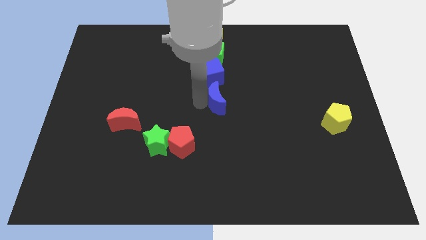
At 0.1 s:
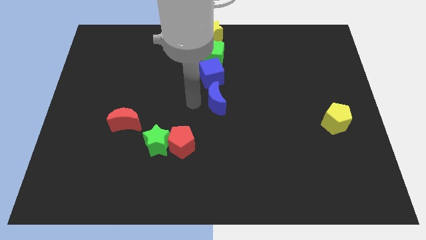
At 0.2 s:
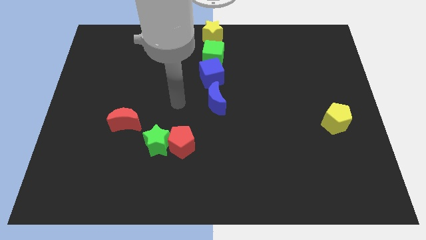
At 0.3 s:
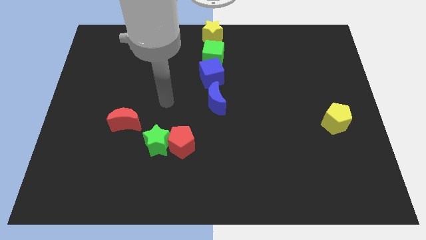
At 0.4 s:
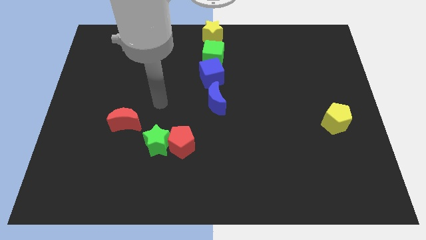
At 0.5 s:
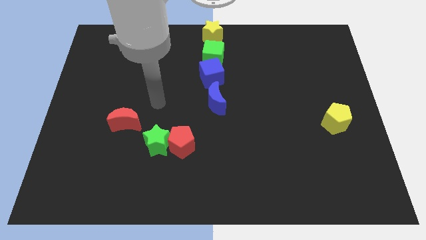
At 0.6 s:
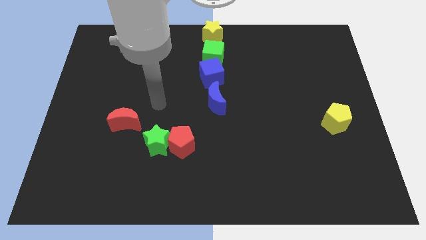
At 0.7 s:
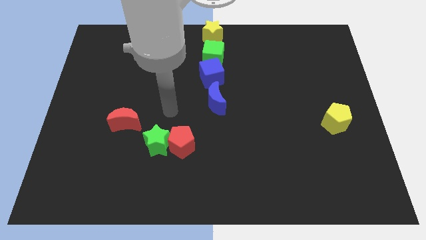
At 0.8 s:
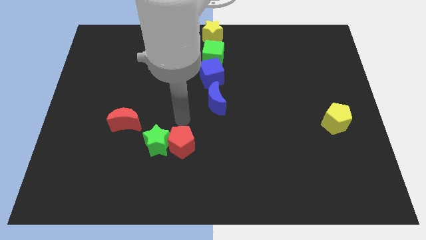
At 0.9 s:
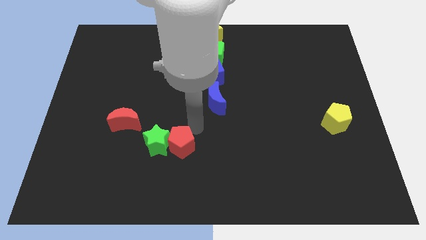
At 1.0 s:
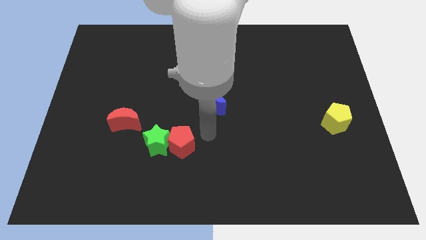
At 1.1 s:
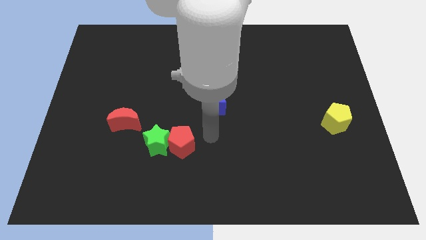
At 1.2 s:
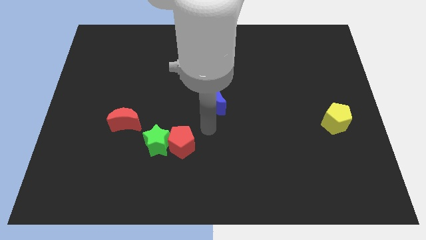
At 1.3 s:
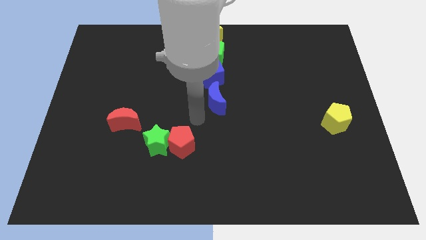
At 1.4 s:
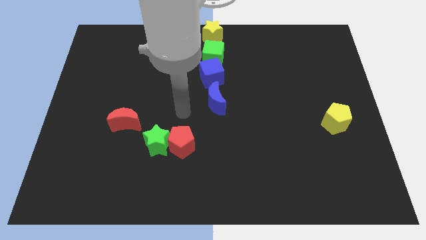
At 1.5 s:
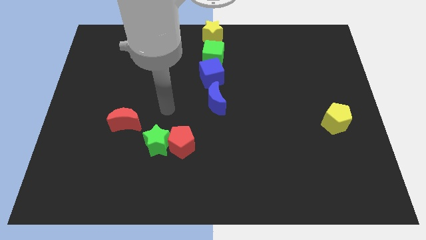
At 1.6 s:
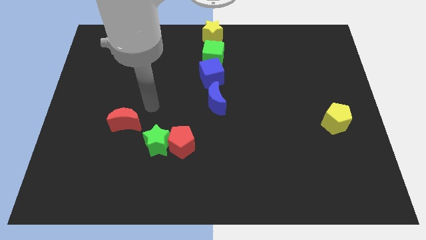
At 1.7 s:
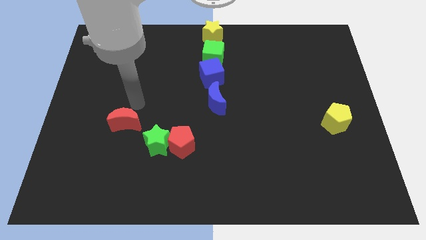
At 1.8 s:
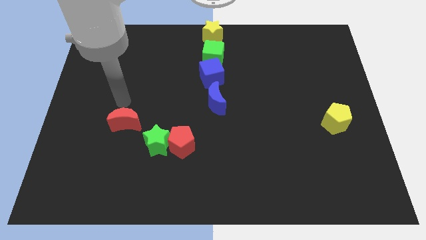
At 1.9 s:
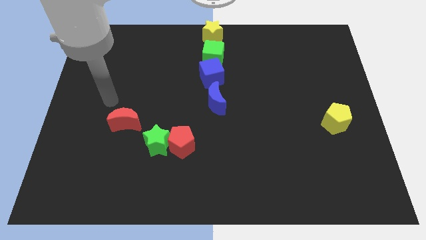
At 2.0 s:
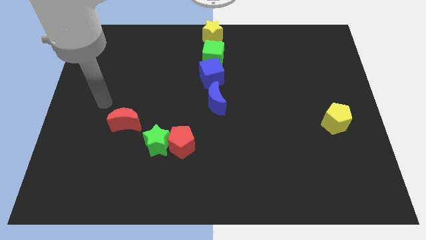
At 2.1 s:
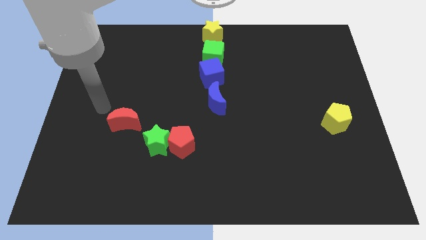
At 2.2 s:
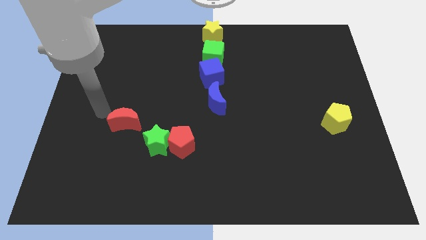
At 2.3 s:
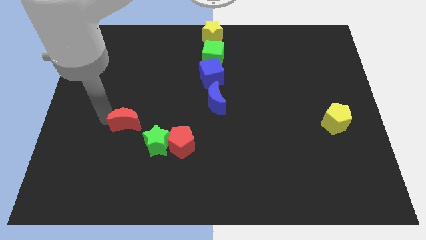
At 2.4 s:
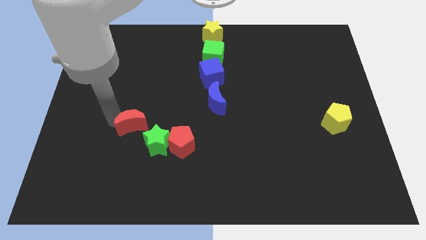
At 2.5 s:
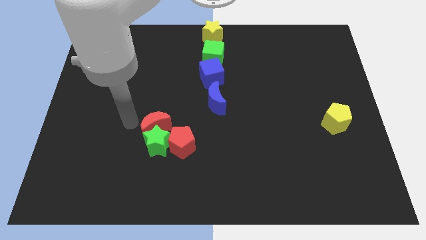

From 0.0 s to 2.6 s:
point your arm top of red moon

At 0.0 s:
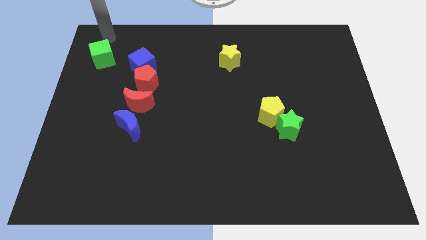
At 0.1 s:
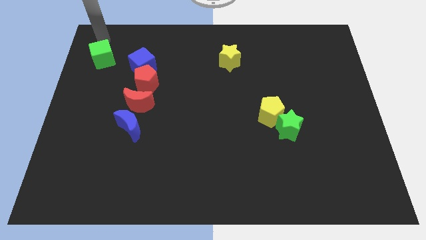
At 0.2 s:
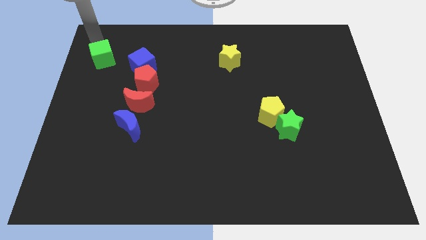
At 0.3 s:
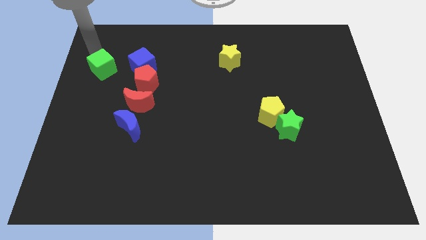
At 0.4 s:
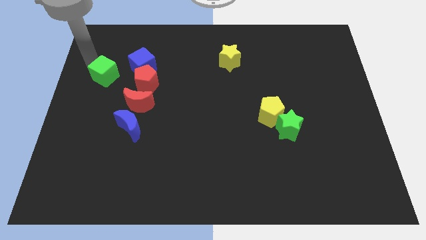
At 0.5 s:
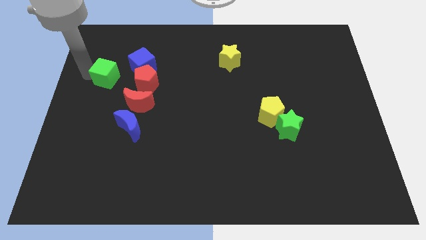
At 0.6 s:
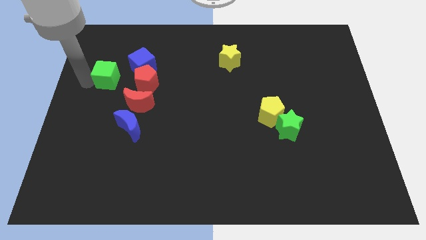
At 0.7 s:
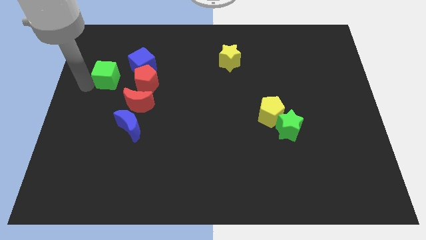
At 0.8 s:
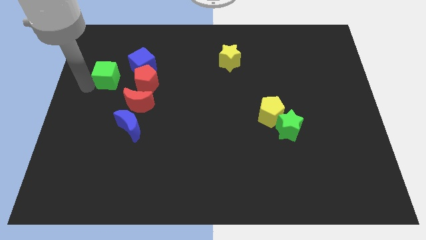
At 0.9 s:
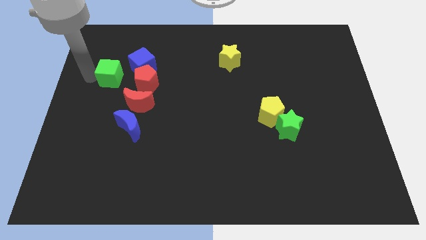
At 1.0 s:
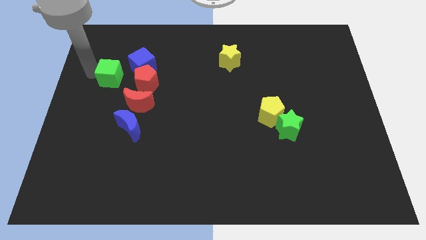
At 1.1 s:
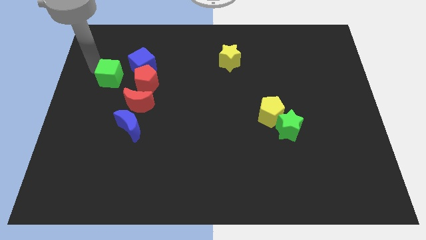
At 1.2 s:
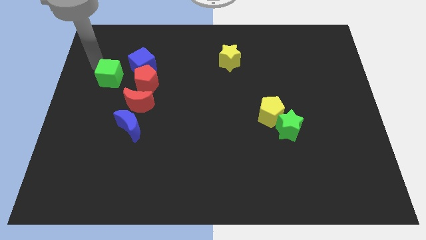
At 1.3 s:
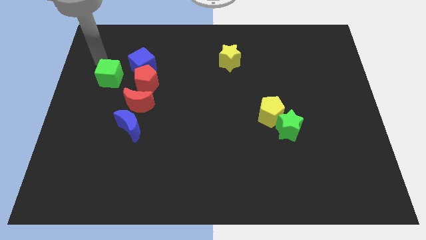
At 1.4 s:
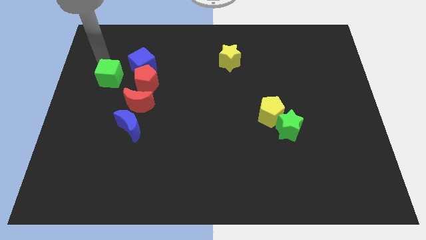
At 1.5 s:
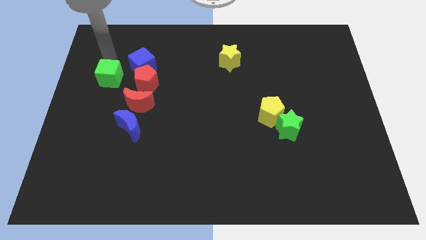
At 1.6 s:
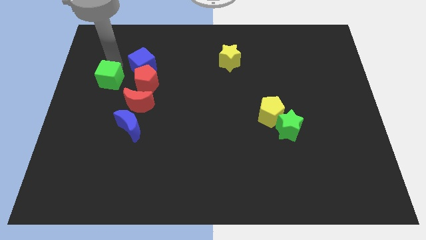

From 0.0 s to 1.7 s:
push the green cube towards red pentagon

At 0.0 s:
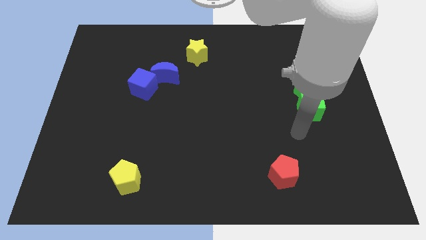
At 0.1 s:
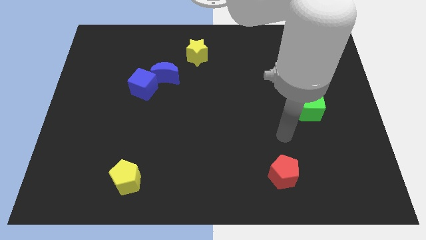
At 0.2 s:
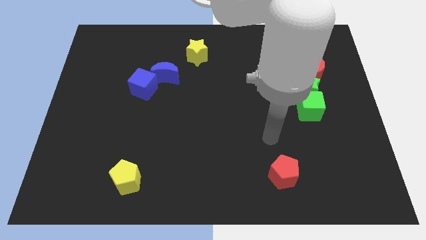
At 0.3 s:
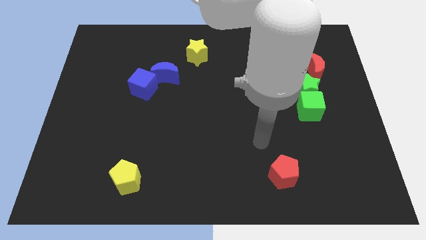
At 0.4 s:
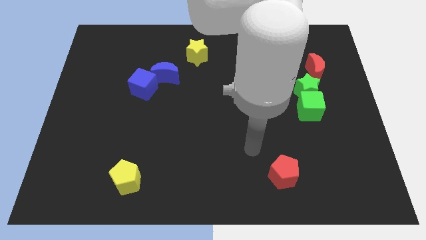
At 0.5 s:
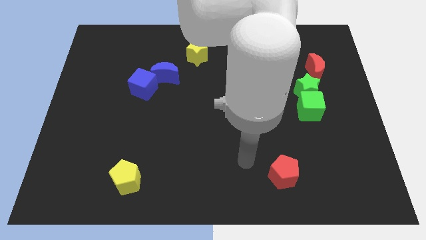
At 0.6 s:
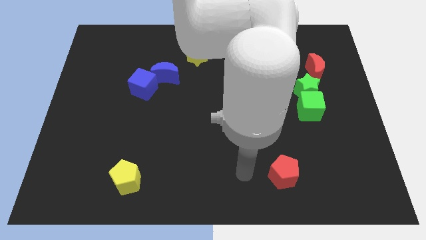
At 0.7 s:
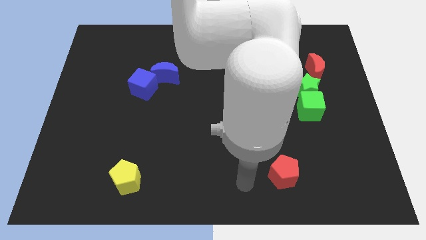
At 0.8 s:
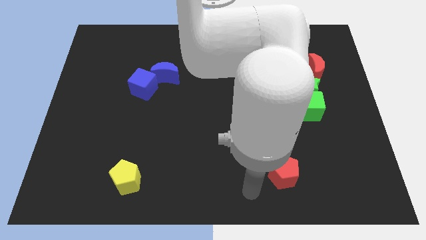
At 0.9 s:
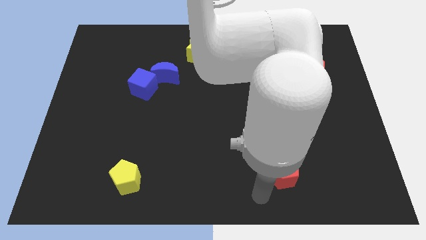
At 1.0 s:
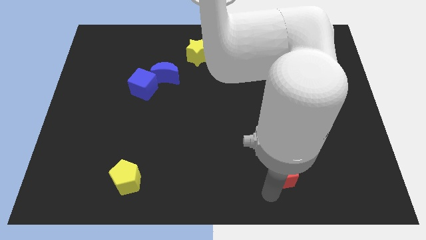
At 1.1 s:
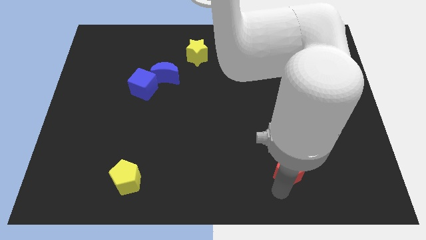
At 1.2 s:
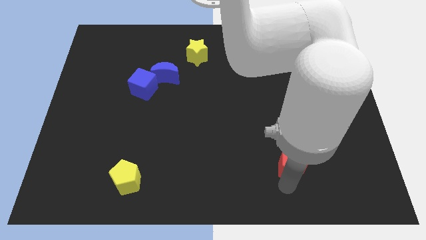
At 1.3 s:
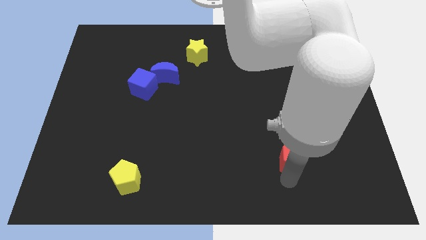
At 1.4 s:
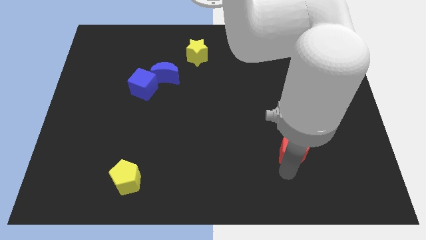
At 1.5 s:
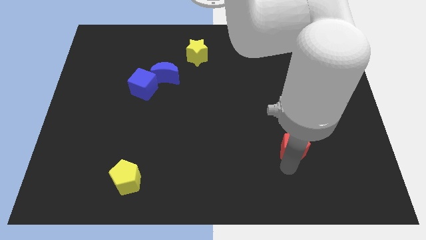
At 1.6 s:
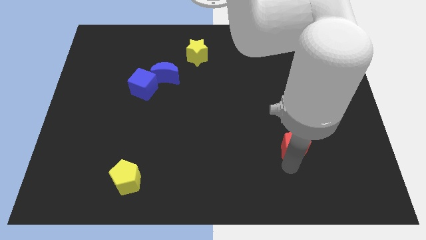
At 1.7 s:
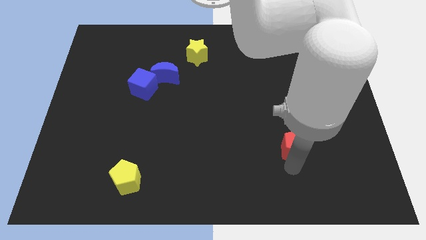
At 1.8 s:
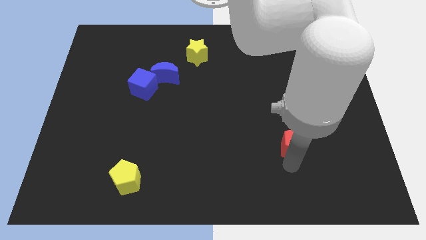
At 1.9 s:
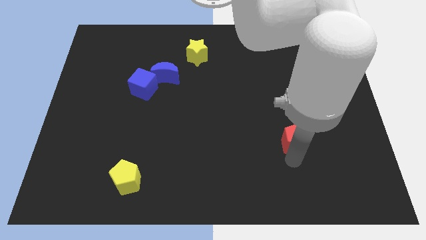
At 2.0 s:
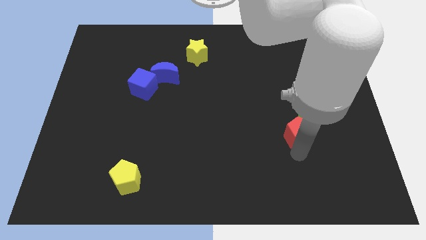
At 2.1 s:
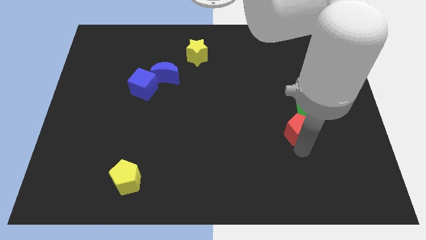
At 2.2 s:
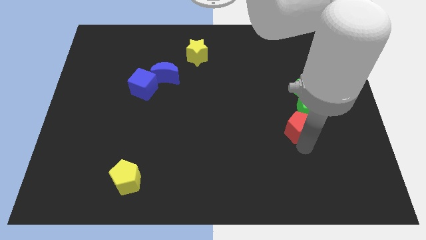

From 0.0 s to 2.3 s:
move the red pentagon diagonal to green cube

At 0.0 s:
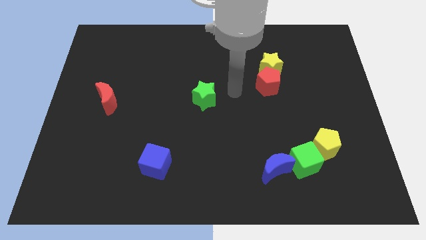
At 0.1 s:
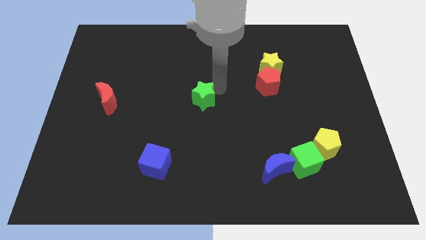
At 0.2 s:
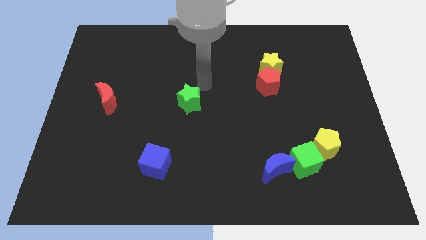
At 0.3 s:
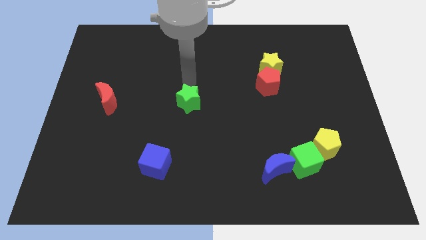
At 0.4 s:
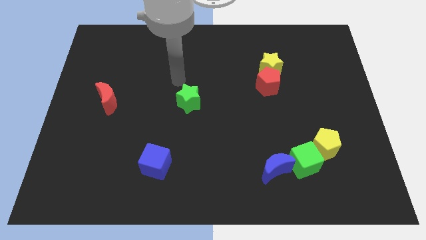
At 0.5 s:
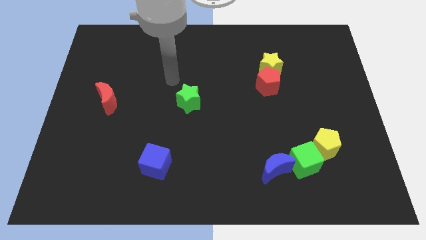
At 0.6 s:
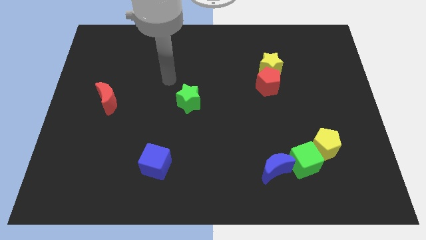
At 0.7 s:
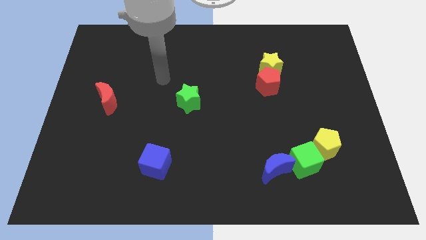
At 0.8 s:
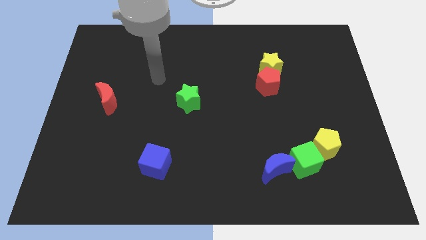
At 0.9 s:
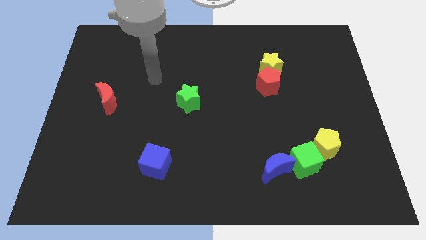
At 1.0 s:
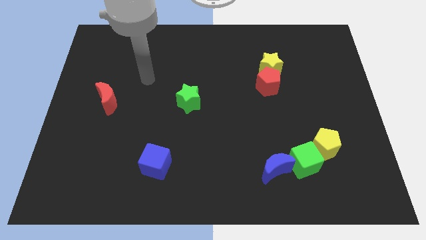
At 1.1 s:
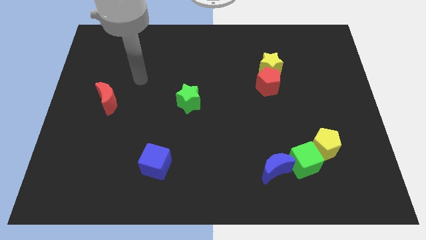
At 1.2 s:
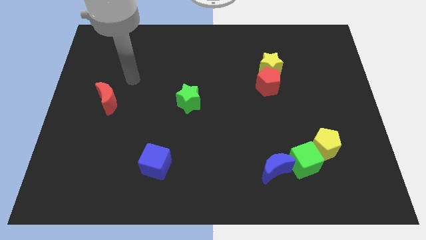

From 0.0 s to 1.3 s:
slightly push the green star to the center of the board

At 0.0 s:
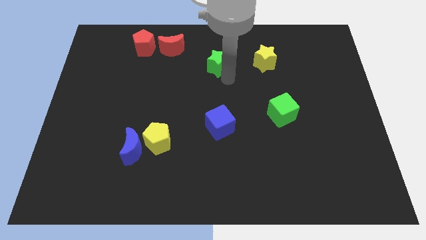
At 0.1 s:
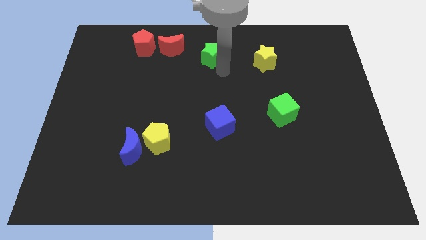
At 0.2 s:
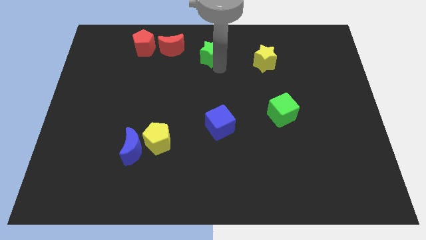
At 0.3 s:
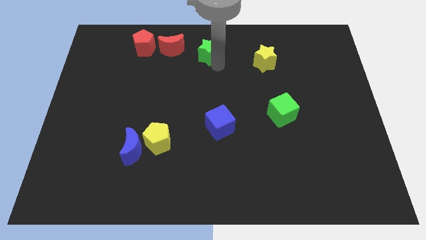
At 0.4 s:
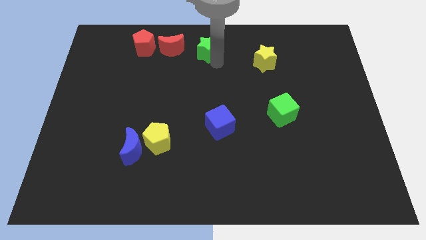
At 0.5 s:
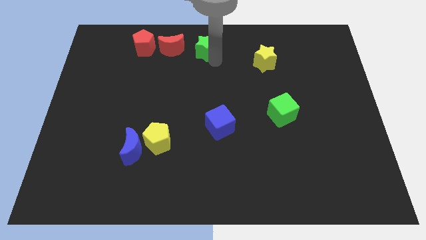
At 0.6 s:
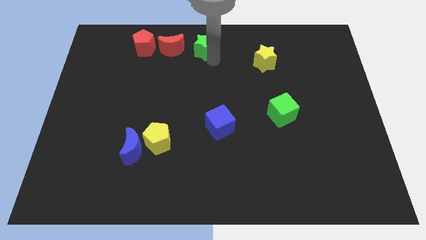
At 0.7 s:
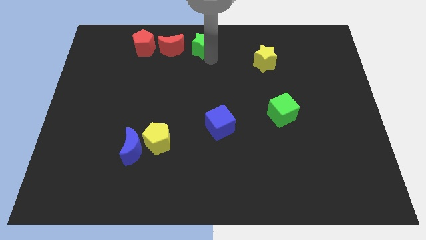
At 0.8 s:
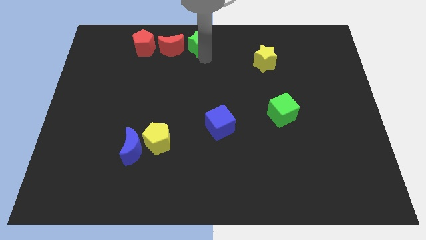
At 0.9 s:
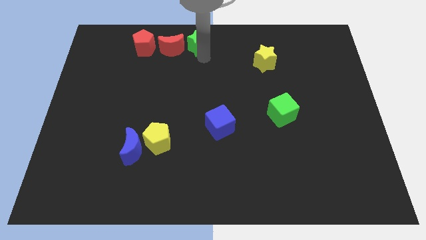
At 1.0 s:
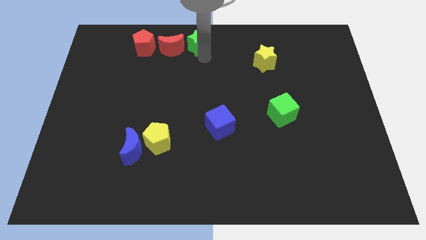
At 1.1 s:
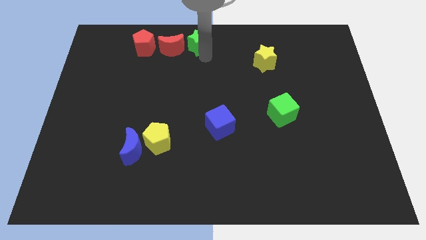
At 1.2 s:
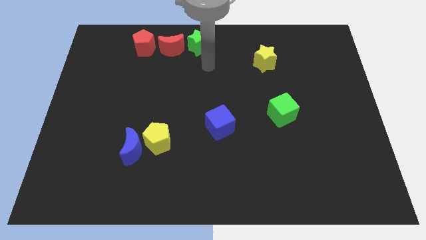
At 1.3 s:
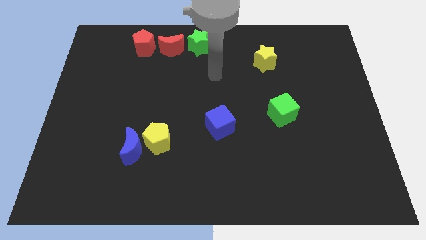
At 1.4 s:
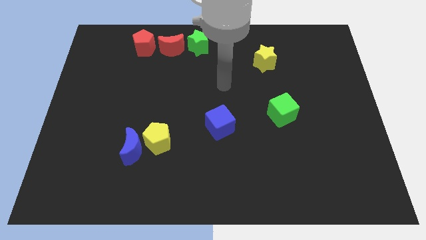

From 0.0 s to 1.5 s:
place the green star right to the red moon
